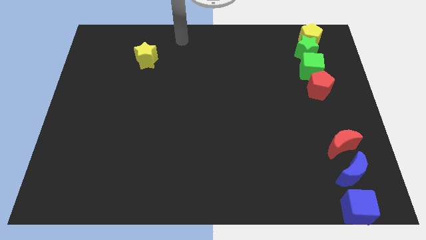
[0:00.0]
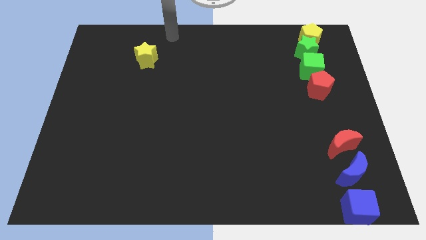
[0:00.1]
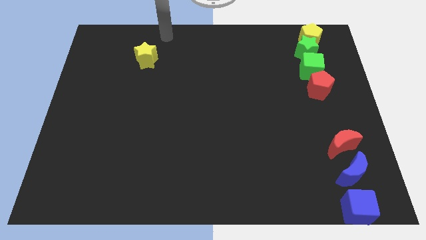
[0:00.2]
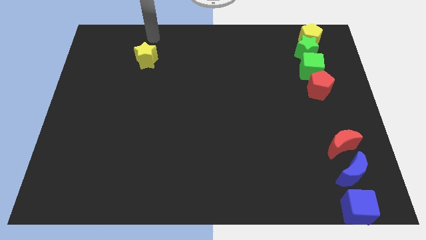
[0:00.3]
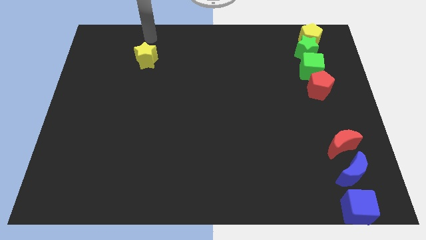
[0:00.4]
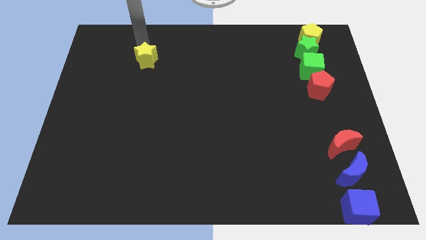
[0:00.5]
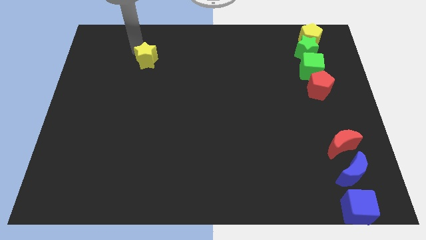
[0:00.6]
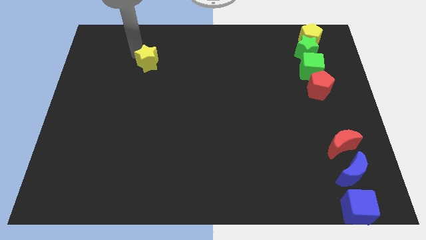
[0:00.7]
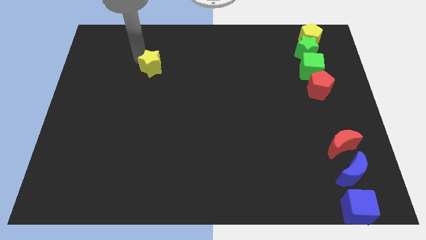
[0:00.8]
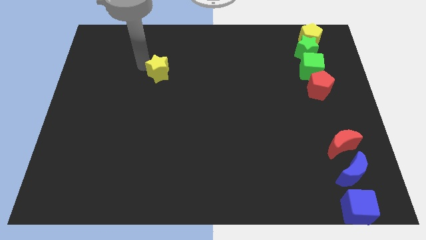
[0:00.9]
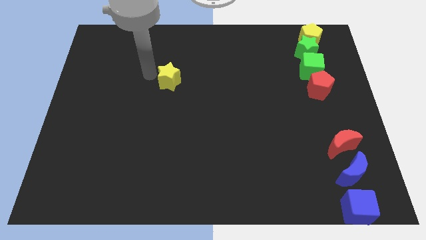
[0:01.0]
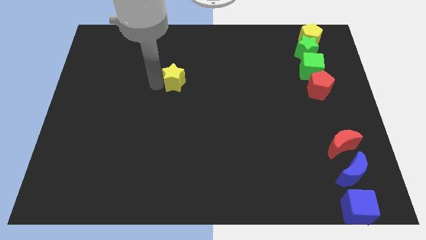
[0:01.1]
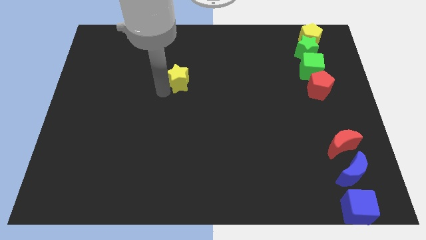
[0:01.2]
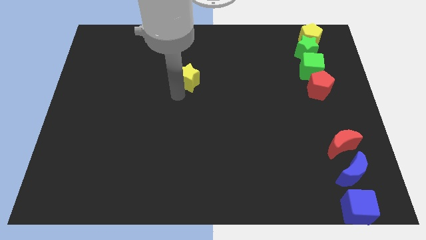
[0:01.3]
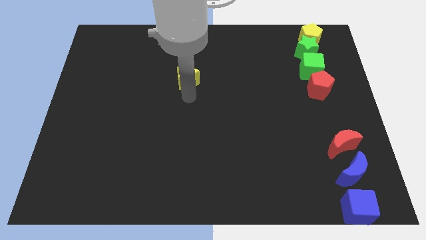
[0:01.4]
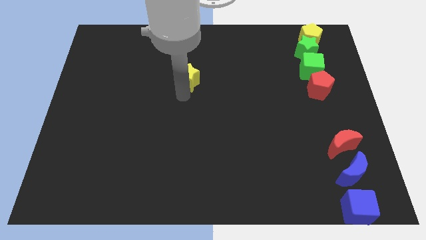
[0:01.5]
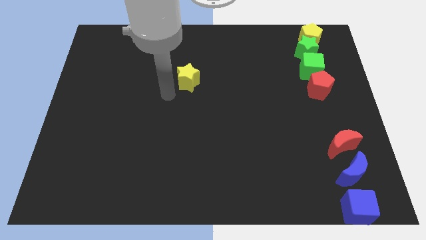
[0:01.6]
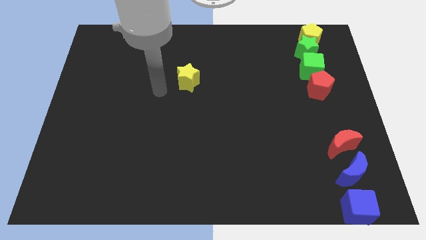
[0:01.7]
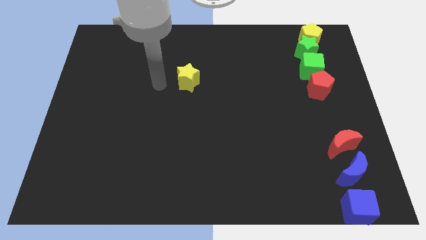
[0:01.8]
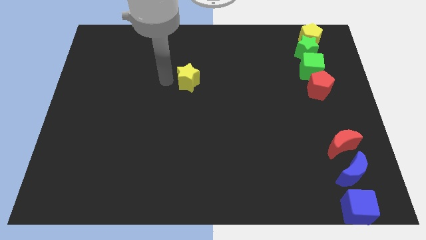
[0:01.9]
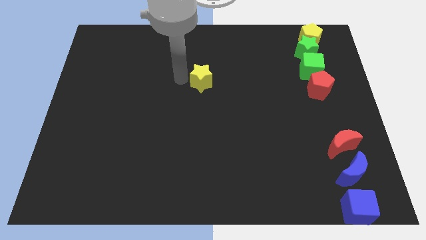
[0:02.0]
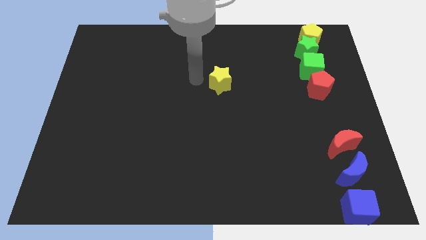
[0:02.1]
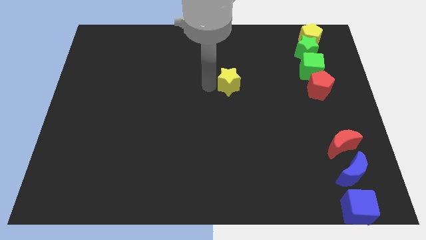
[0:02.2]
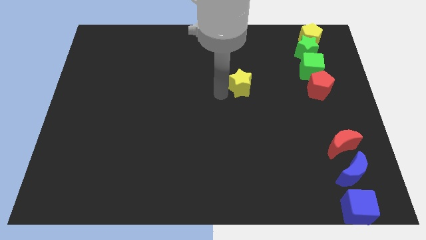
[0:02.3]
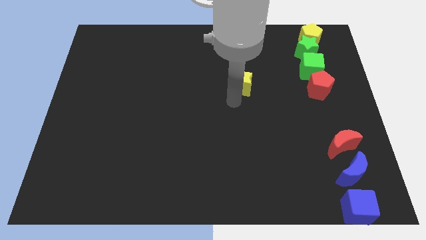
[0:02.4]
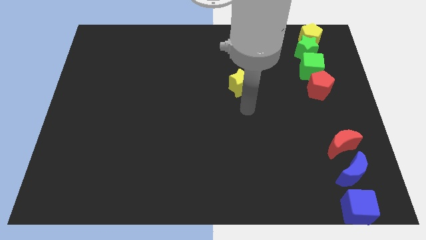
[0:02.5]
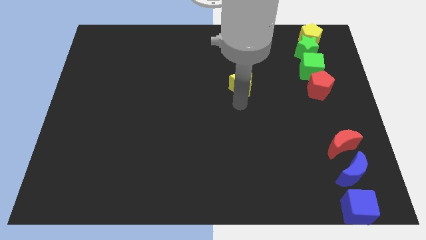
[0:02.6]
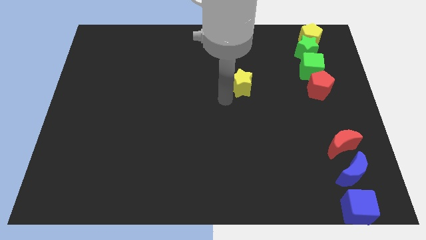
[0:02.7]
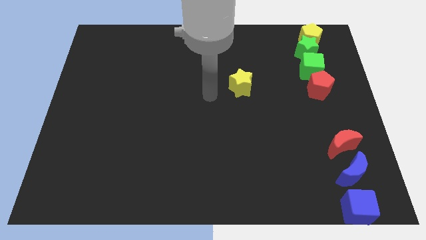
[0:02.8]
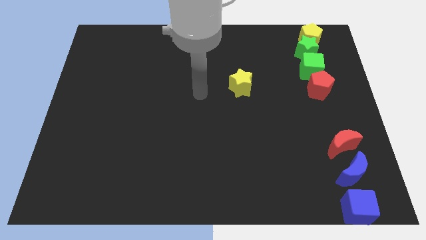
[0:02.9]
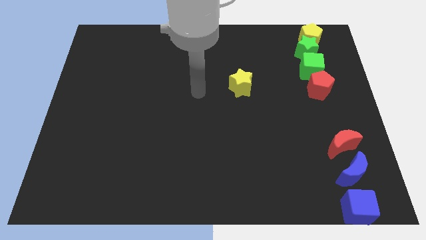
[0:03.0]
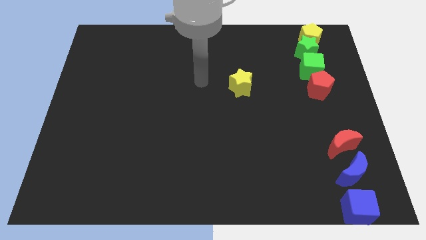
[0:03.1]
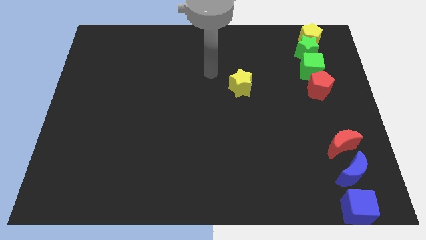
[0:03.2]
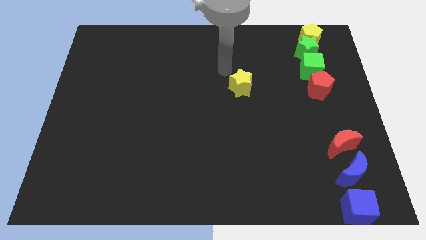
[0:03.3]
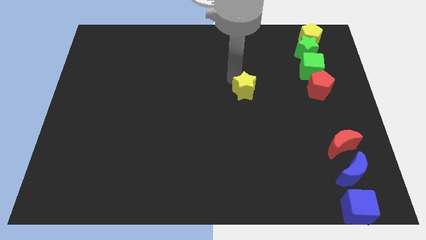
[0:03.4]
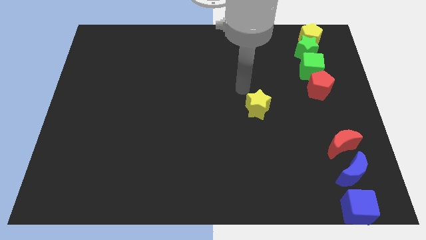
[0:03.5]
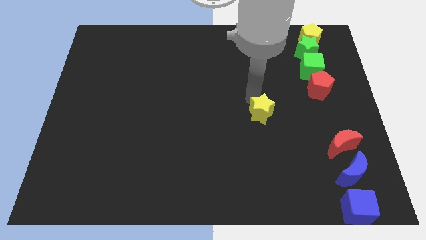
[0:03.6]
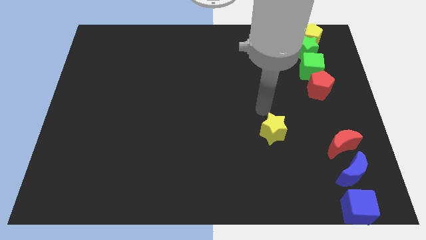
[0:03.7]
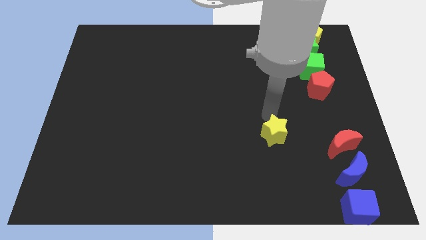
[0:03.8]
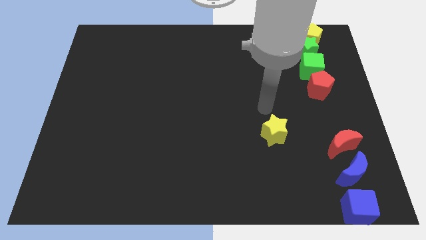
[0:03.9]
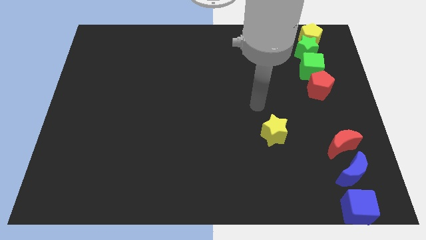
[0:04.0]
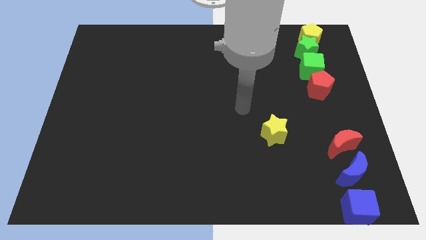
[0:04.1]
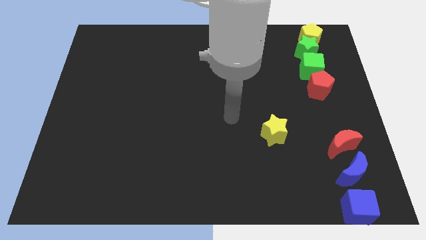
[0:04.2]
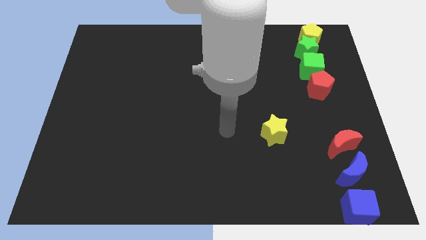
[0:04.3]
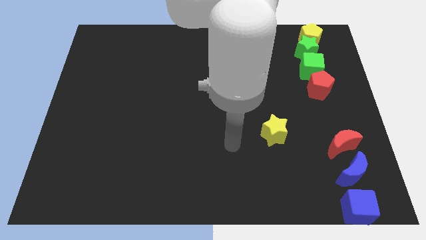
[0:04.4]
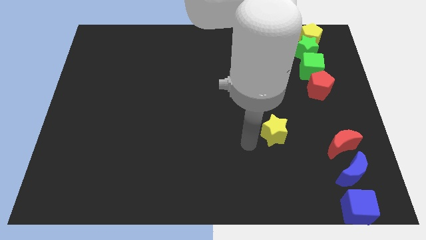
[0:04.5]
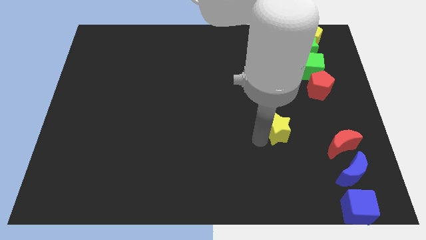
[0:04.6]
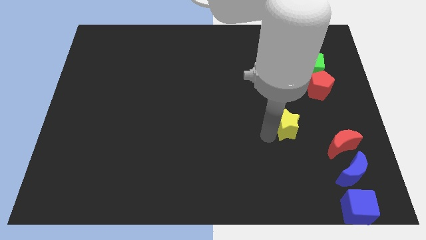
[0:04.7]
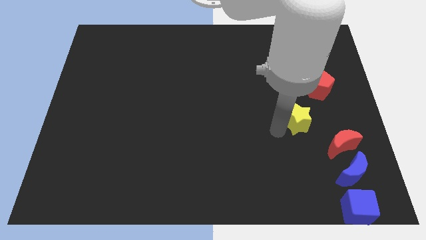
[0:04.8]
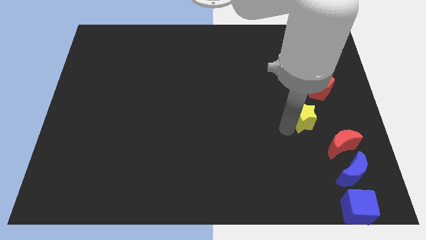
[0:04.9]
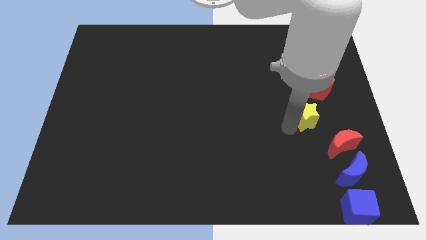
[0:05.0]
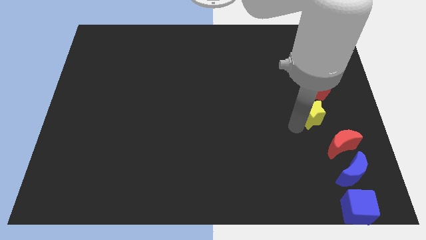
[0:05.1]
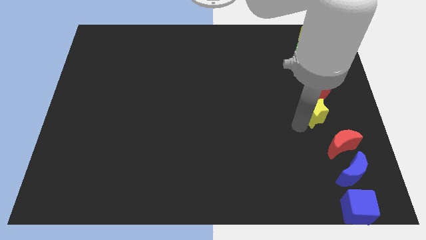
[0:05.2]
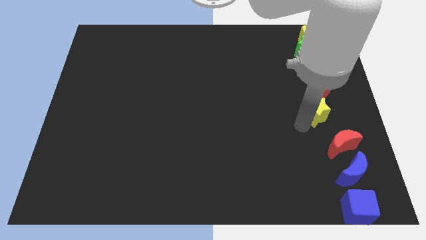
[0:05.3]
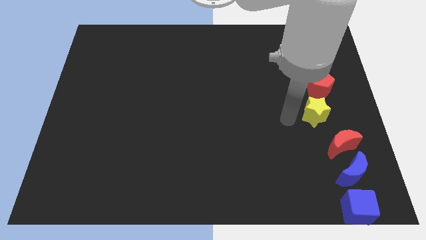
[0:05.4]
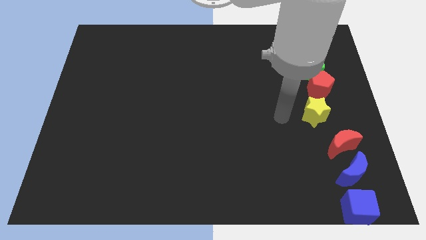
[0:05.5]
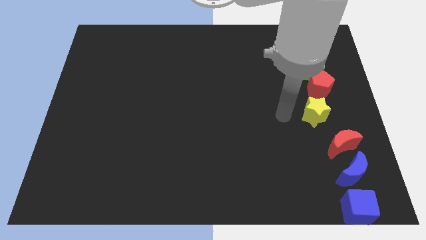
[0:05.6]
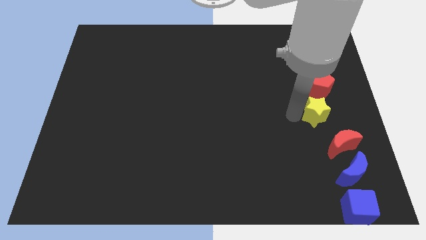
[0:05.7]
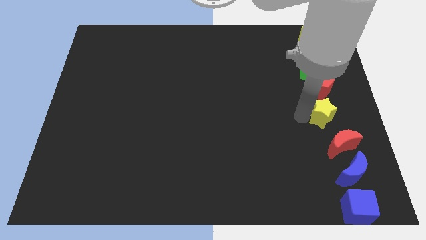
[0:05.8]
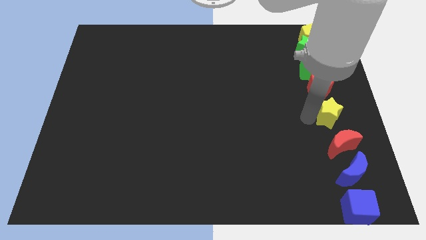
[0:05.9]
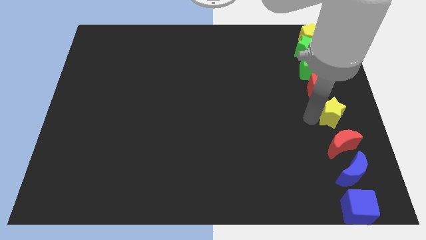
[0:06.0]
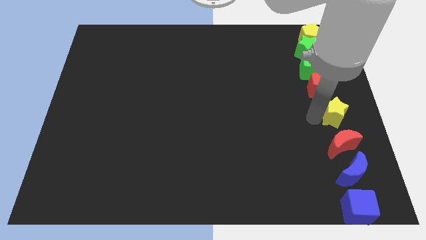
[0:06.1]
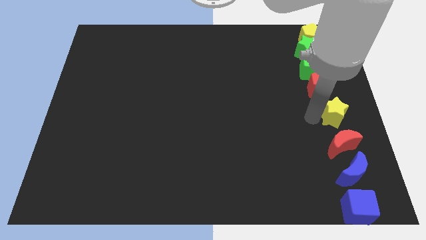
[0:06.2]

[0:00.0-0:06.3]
push the yellow star towards the right center of the board

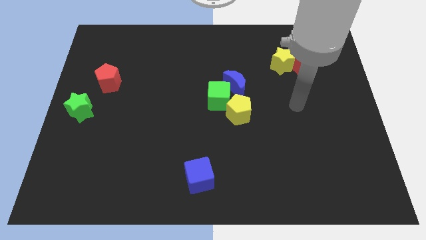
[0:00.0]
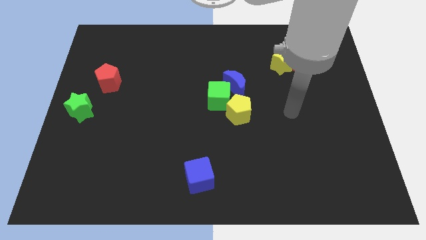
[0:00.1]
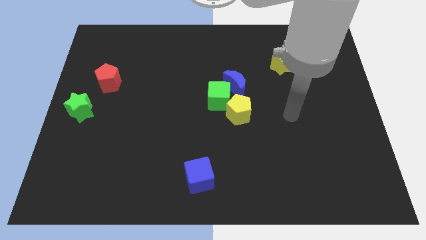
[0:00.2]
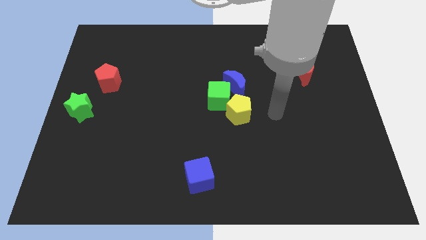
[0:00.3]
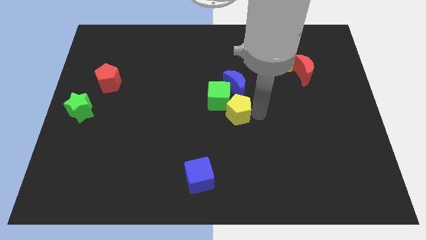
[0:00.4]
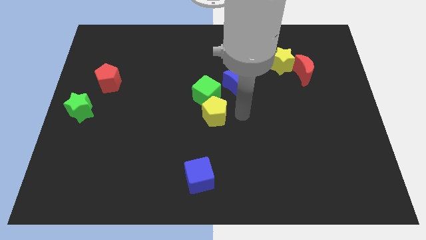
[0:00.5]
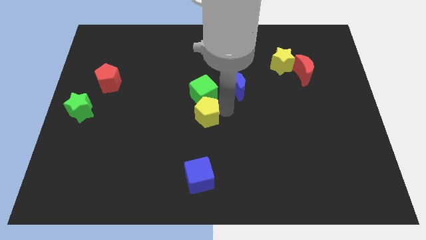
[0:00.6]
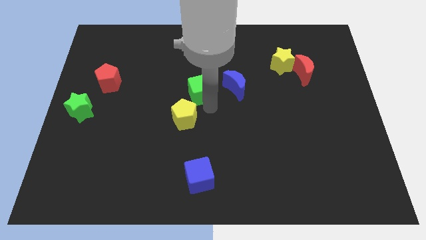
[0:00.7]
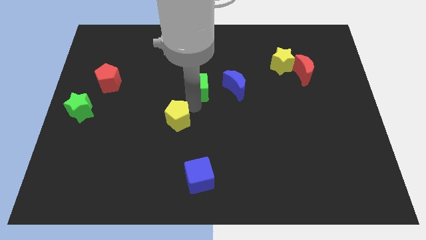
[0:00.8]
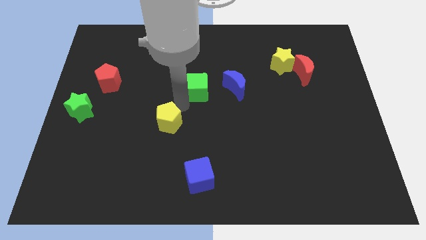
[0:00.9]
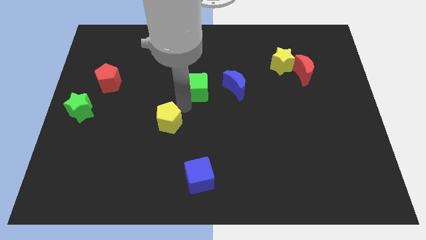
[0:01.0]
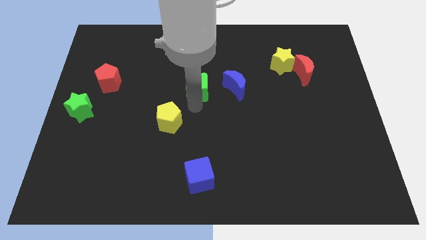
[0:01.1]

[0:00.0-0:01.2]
separate the yellow pentagon from the green cube

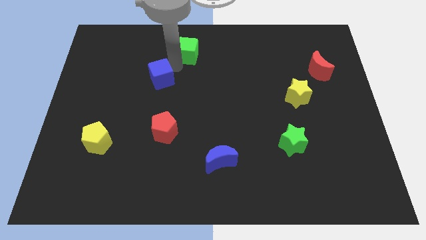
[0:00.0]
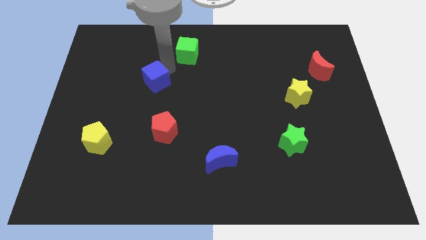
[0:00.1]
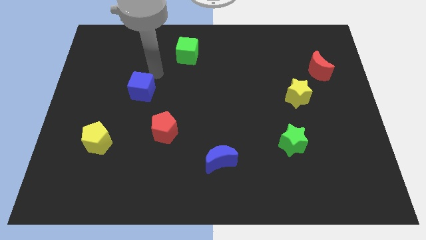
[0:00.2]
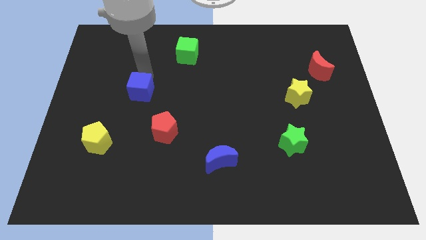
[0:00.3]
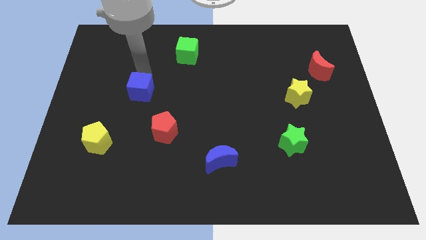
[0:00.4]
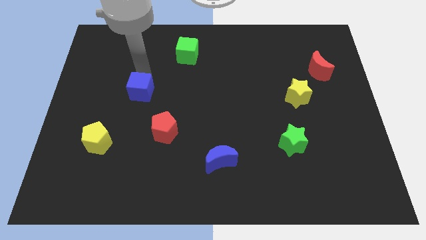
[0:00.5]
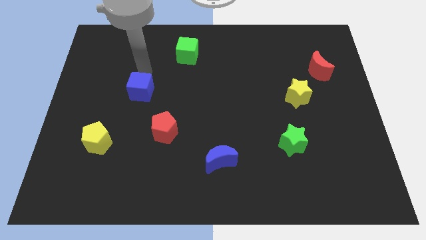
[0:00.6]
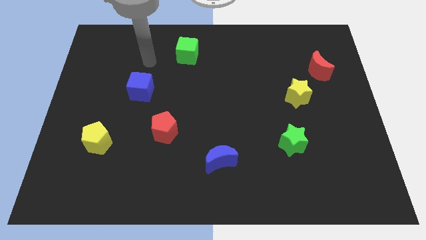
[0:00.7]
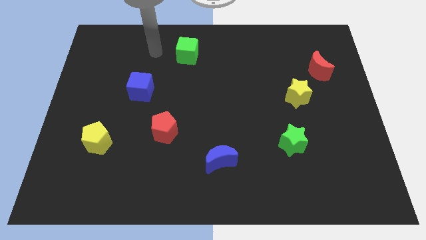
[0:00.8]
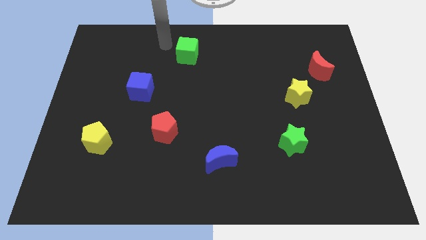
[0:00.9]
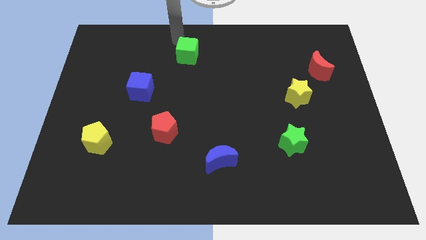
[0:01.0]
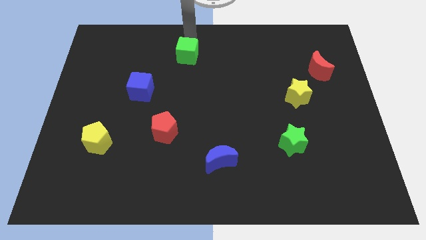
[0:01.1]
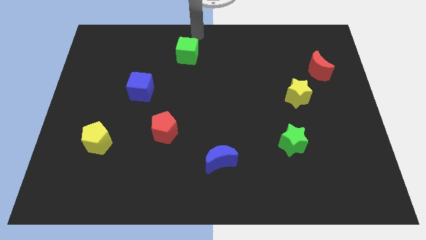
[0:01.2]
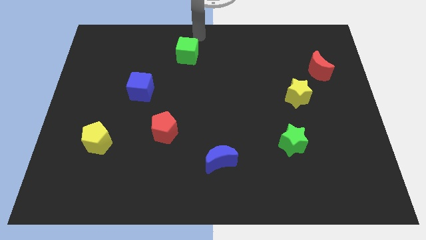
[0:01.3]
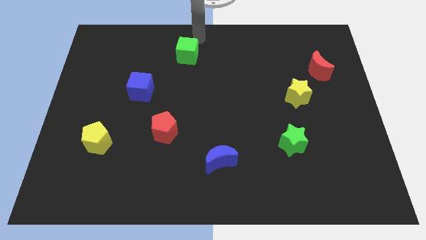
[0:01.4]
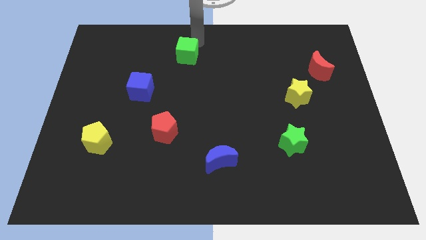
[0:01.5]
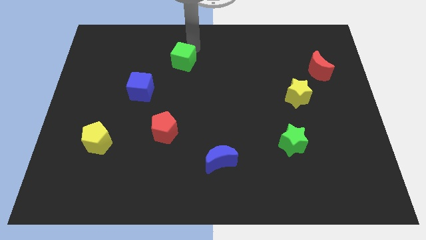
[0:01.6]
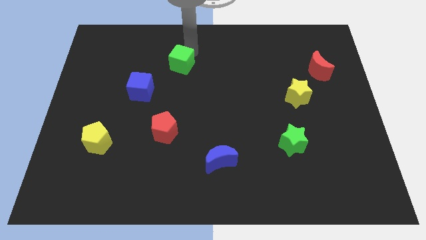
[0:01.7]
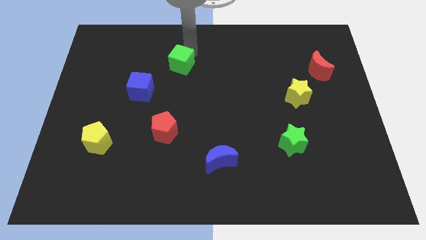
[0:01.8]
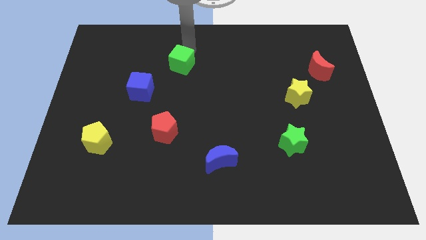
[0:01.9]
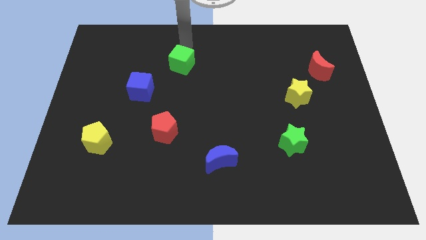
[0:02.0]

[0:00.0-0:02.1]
move the blue and green cube slightly towards the bottom
